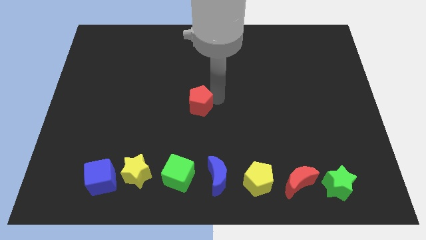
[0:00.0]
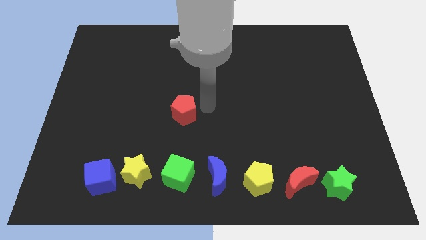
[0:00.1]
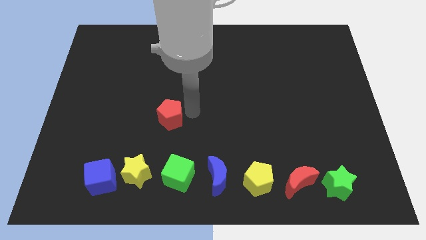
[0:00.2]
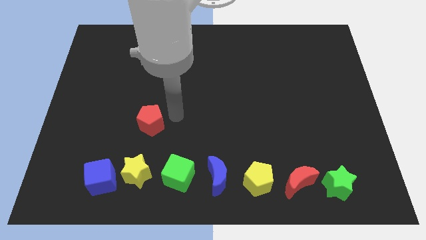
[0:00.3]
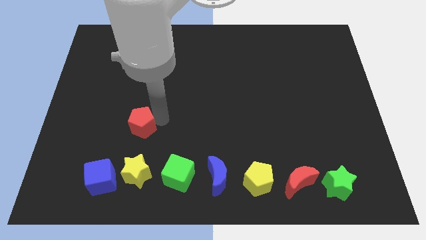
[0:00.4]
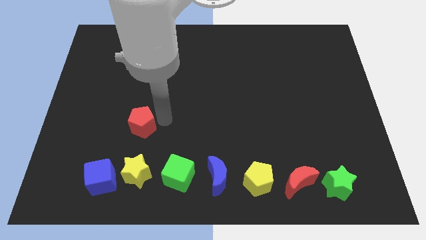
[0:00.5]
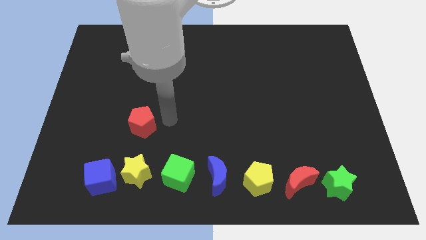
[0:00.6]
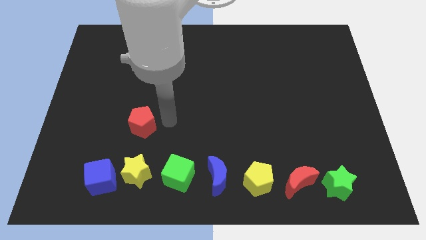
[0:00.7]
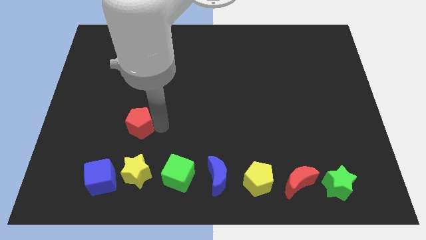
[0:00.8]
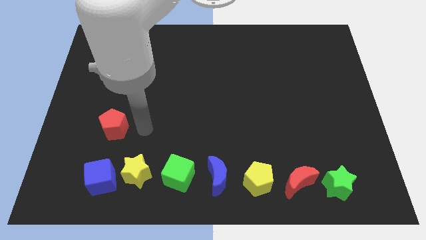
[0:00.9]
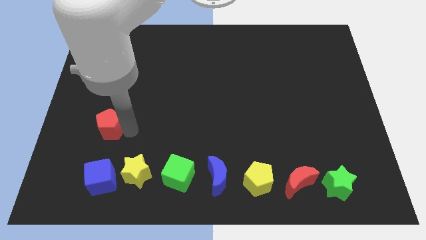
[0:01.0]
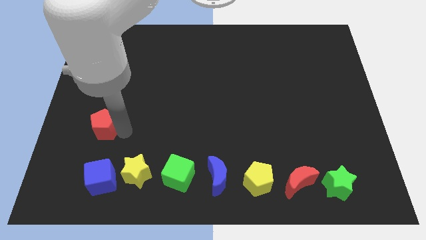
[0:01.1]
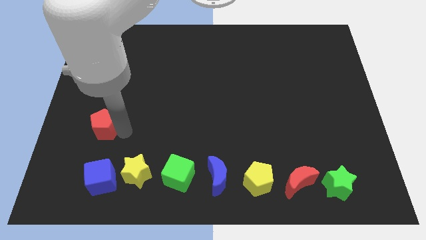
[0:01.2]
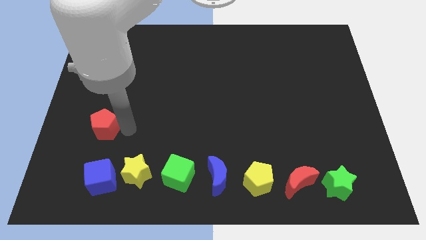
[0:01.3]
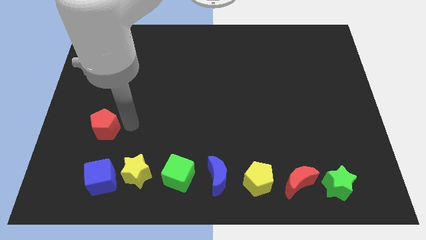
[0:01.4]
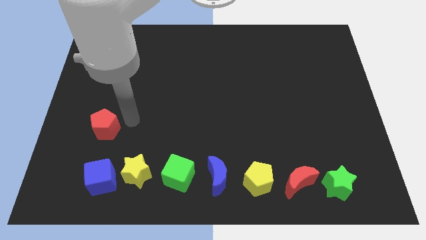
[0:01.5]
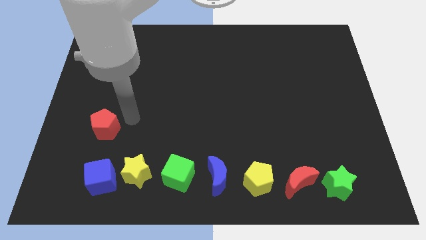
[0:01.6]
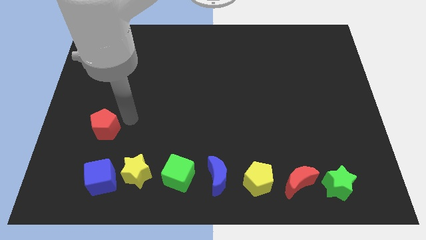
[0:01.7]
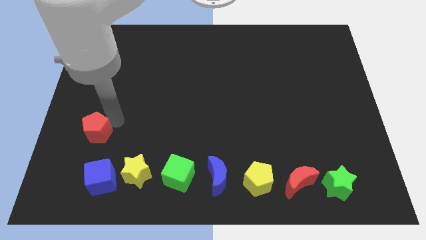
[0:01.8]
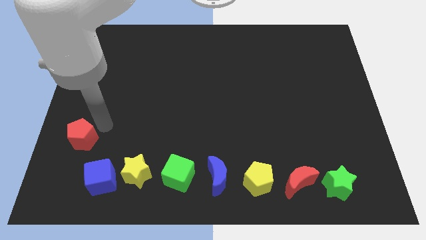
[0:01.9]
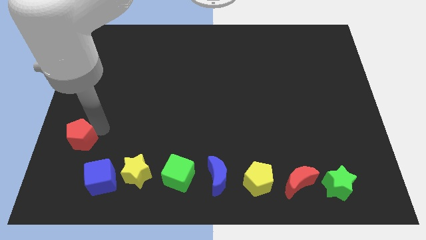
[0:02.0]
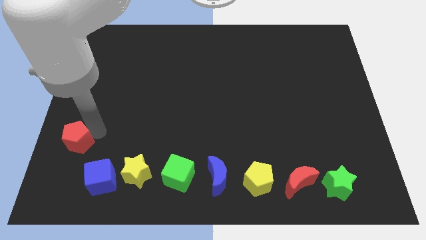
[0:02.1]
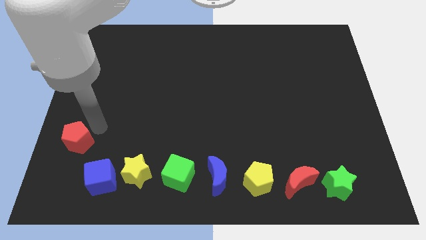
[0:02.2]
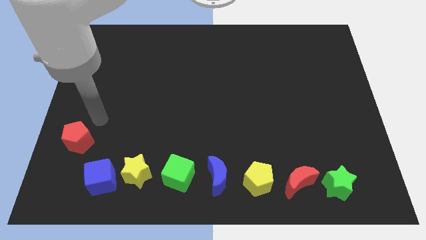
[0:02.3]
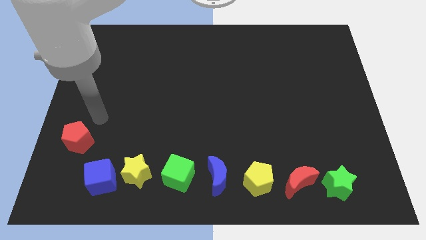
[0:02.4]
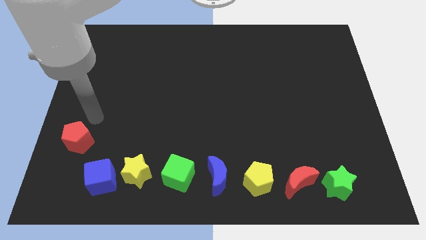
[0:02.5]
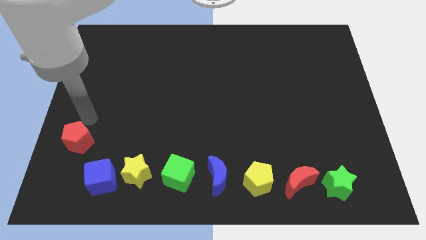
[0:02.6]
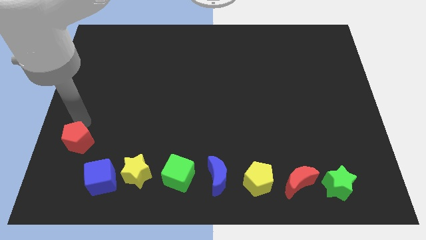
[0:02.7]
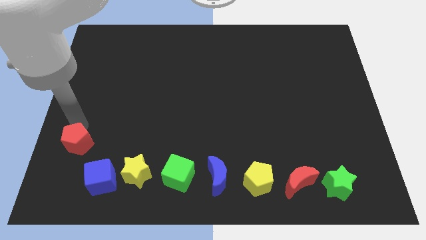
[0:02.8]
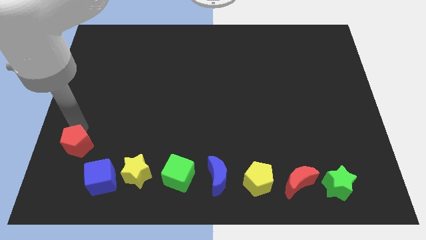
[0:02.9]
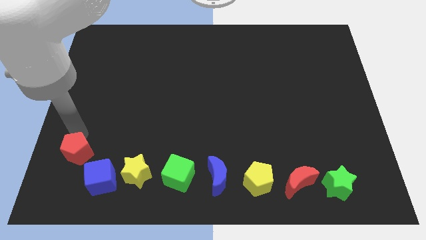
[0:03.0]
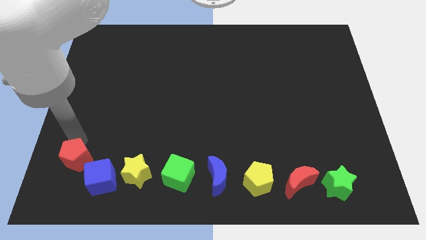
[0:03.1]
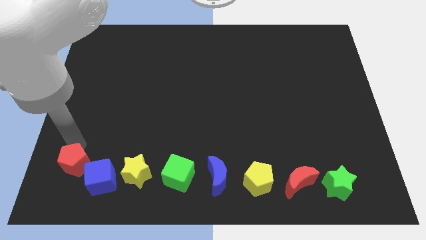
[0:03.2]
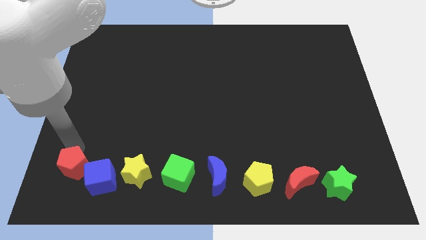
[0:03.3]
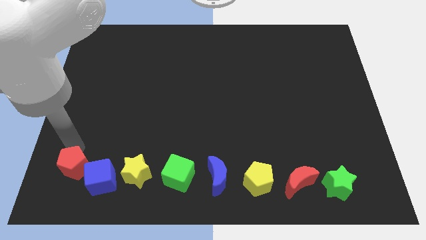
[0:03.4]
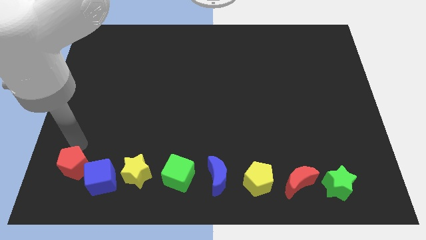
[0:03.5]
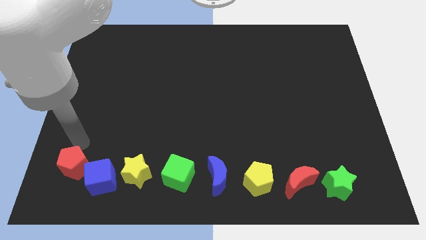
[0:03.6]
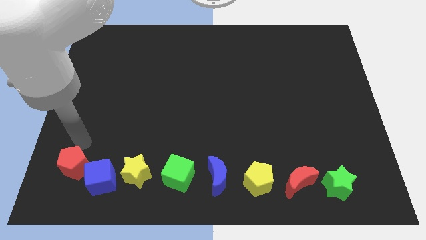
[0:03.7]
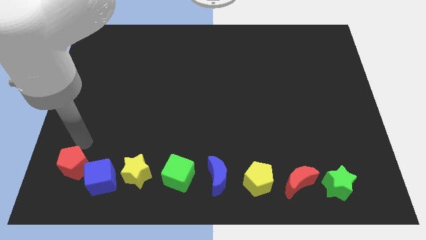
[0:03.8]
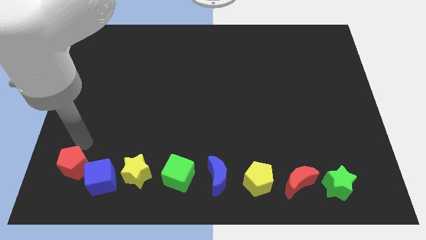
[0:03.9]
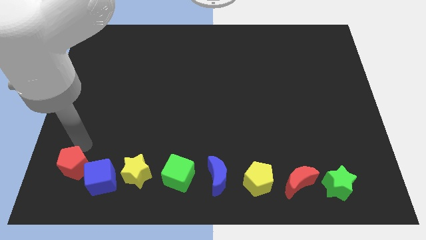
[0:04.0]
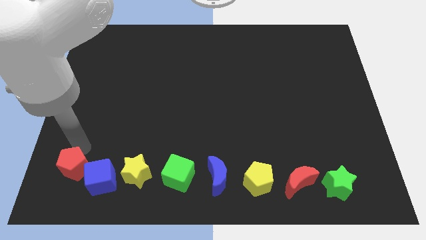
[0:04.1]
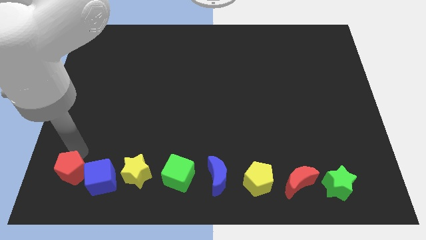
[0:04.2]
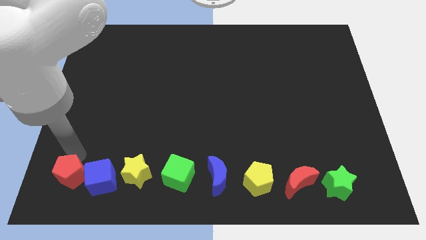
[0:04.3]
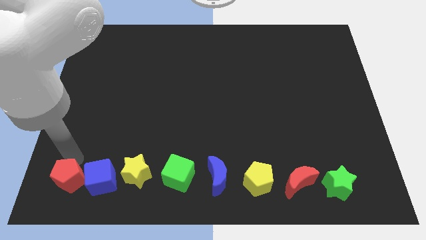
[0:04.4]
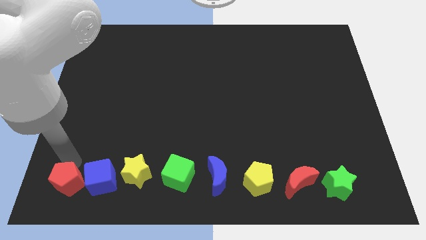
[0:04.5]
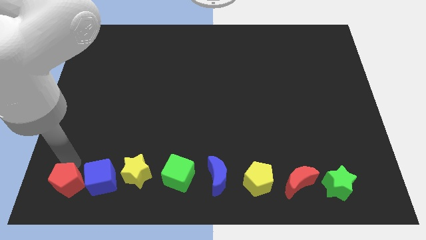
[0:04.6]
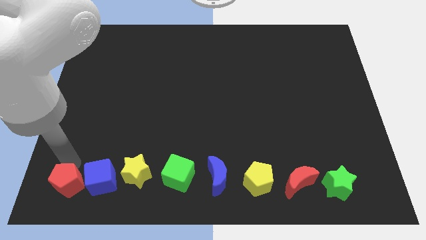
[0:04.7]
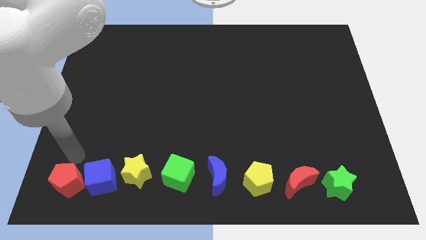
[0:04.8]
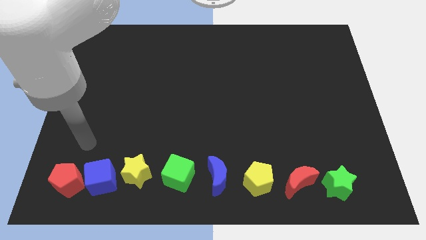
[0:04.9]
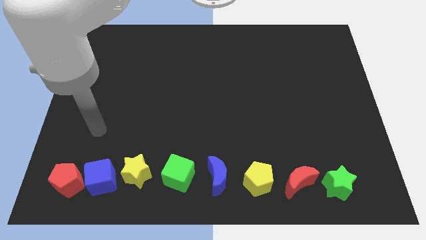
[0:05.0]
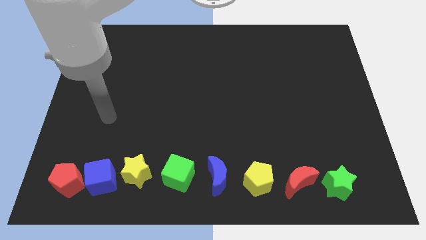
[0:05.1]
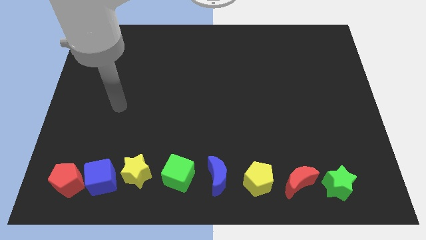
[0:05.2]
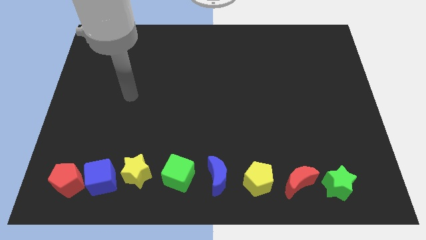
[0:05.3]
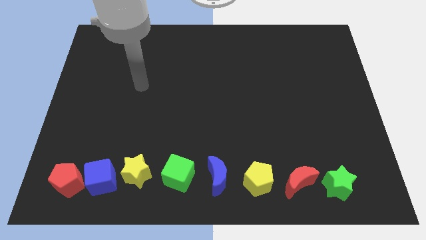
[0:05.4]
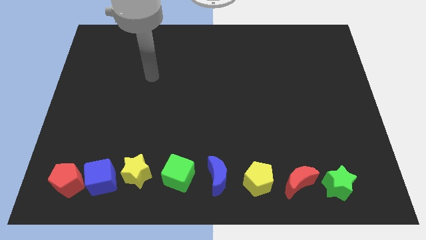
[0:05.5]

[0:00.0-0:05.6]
place red pentagon to the left of blue cube

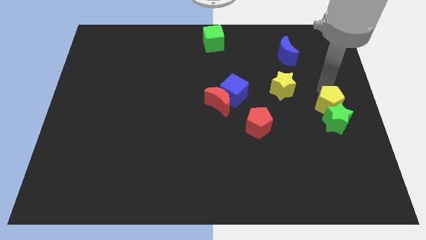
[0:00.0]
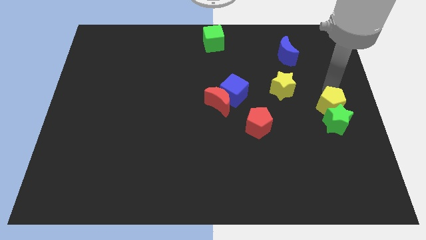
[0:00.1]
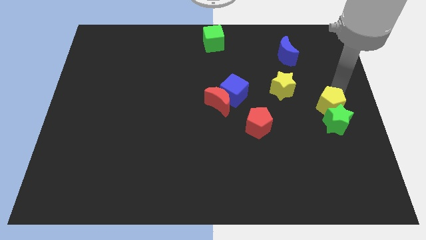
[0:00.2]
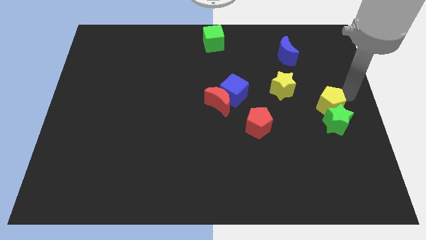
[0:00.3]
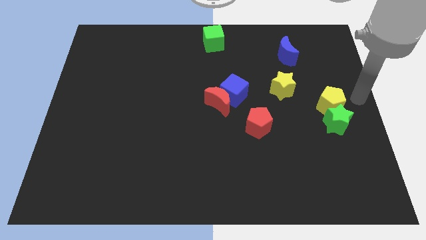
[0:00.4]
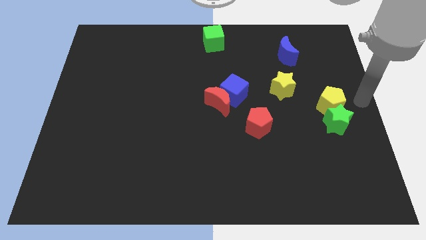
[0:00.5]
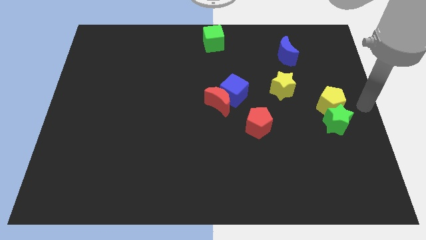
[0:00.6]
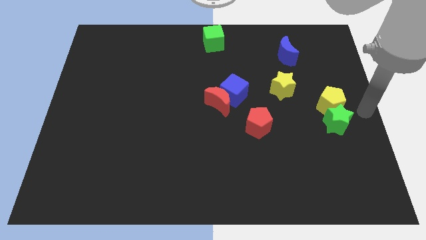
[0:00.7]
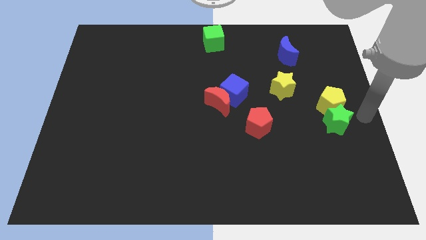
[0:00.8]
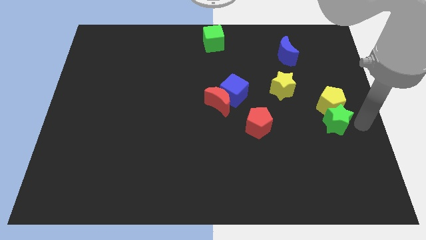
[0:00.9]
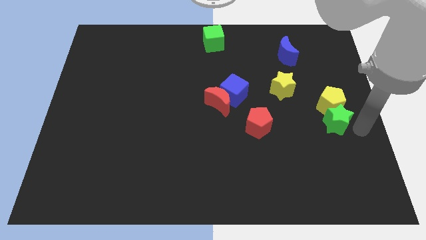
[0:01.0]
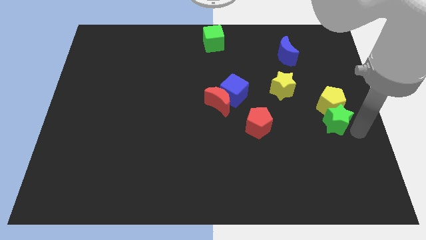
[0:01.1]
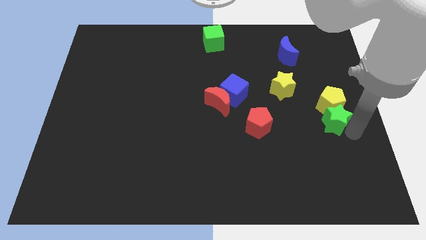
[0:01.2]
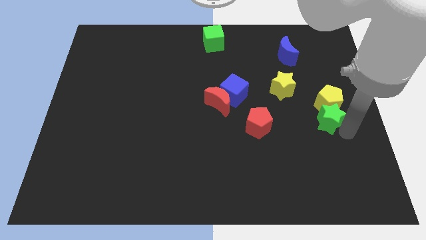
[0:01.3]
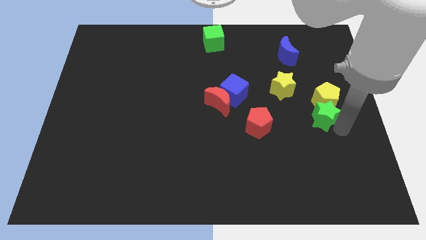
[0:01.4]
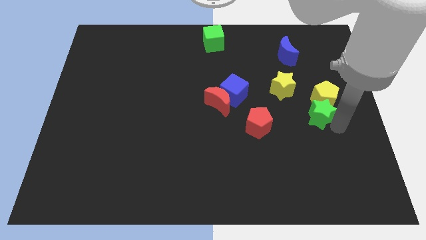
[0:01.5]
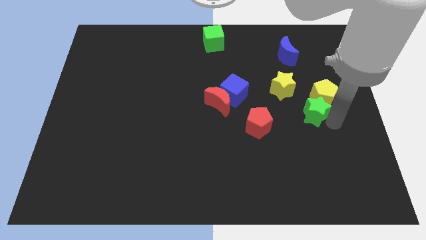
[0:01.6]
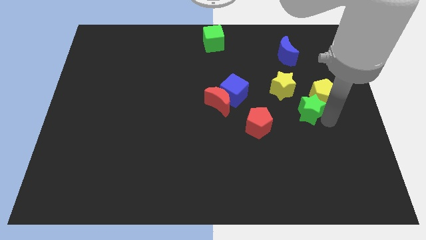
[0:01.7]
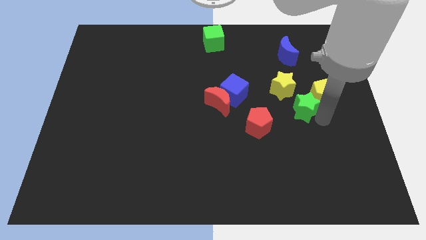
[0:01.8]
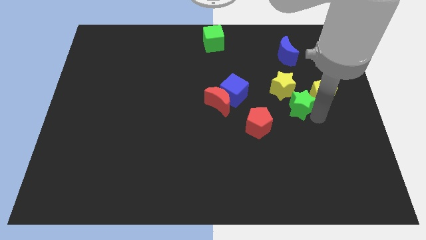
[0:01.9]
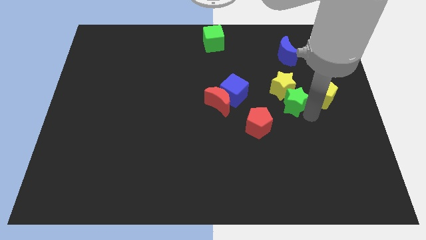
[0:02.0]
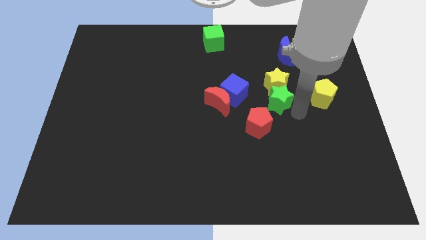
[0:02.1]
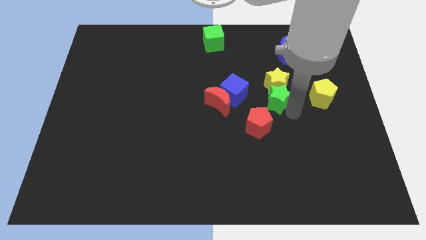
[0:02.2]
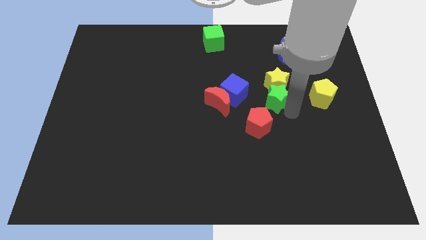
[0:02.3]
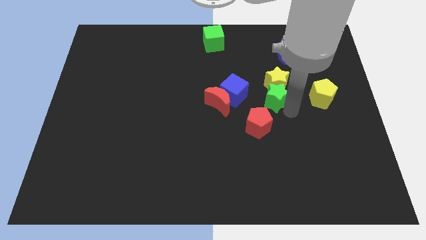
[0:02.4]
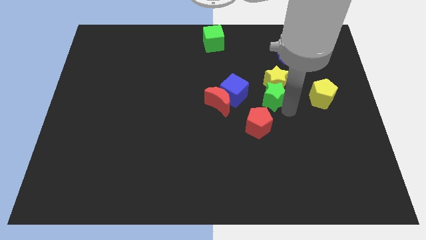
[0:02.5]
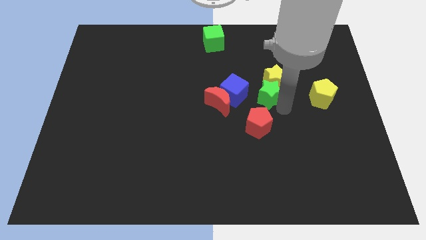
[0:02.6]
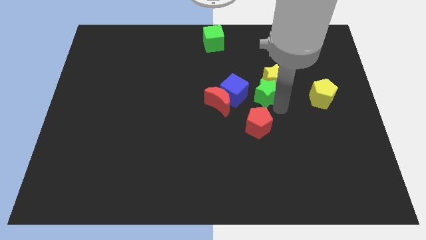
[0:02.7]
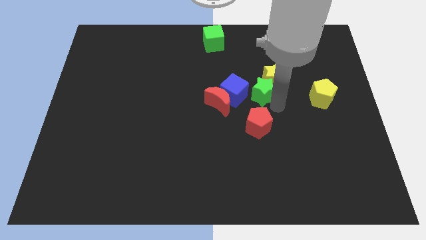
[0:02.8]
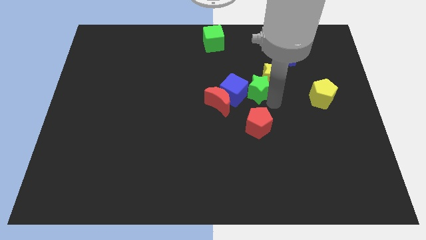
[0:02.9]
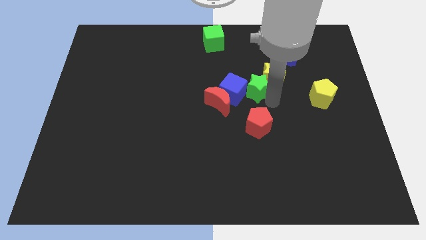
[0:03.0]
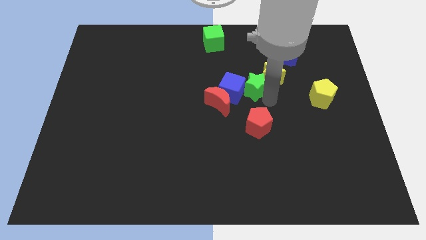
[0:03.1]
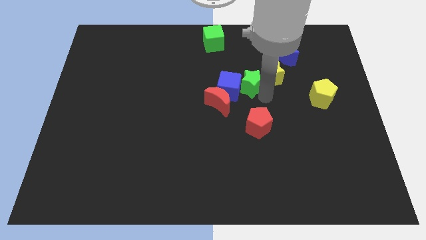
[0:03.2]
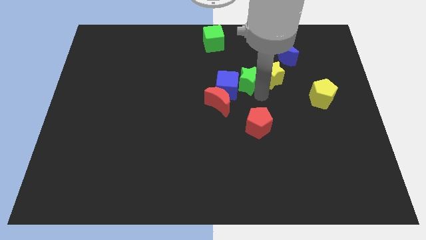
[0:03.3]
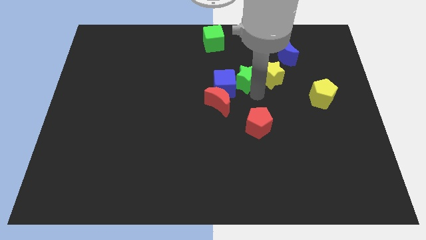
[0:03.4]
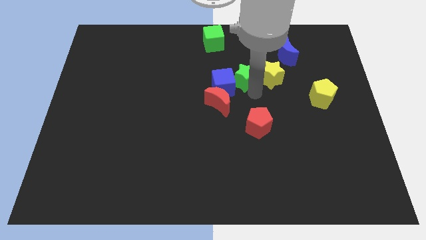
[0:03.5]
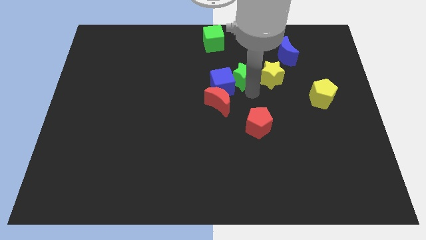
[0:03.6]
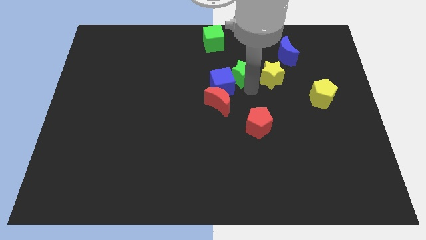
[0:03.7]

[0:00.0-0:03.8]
place green star between yellow star and blue cube
